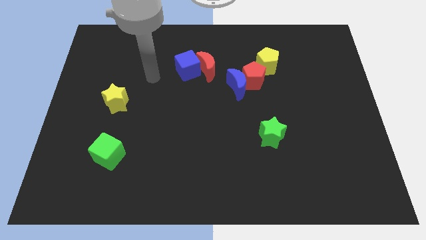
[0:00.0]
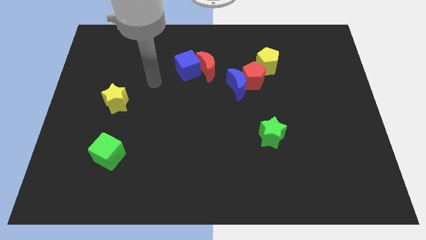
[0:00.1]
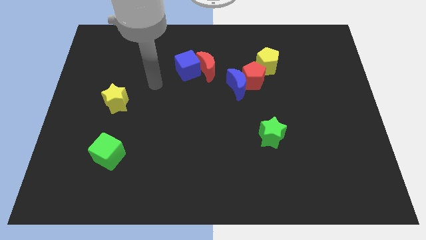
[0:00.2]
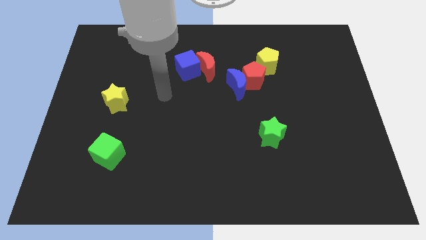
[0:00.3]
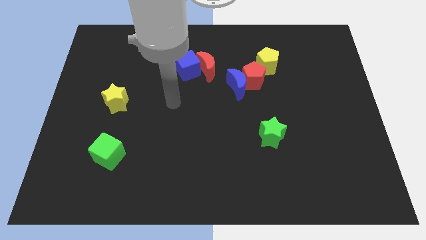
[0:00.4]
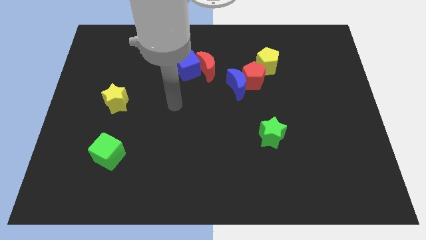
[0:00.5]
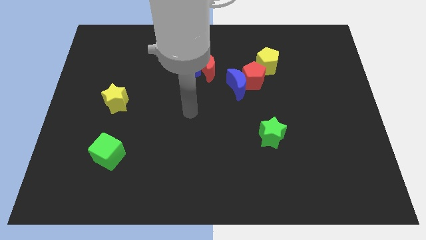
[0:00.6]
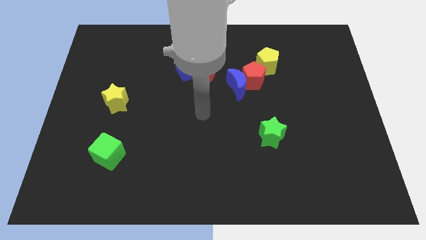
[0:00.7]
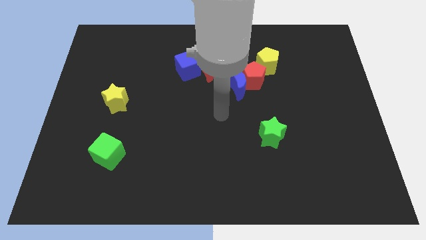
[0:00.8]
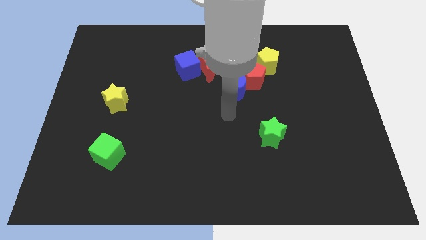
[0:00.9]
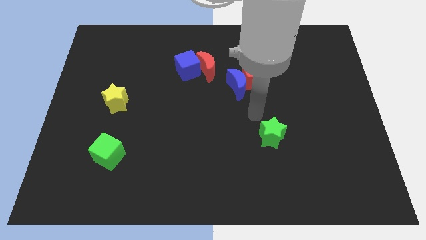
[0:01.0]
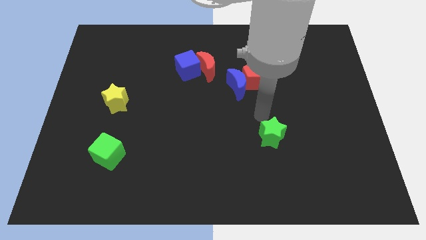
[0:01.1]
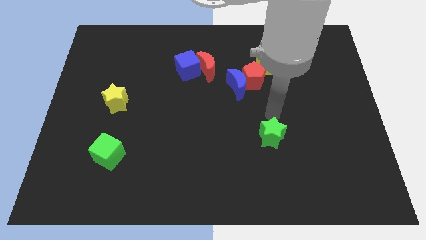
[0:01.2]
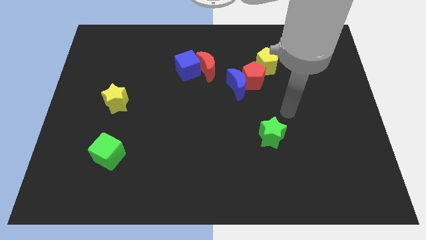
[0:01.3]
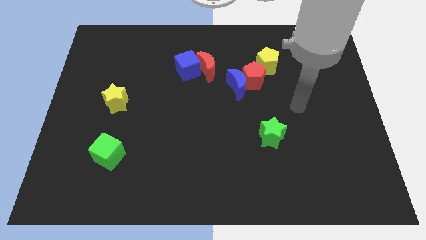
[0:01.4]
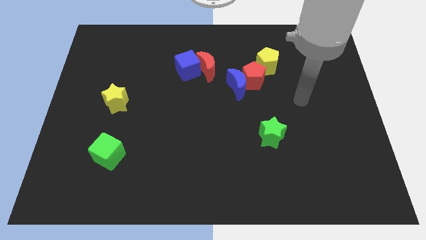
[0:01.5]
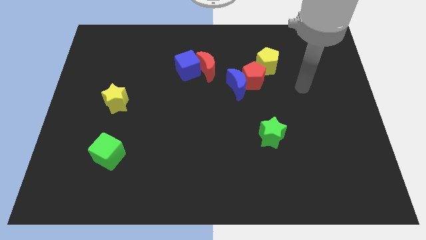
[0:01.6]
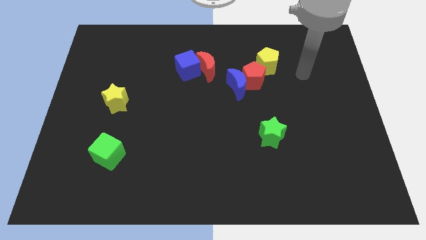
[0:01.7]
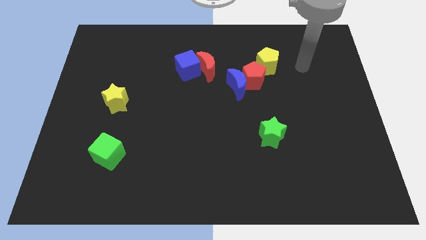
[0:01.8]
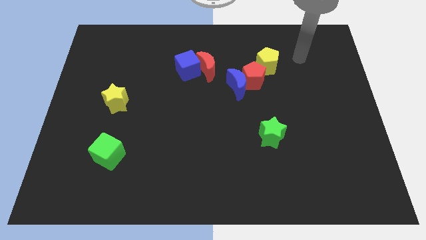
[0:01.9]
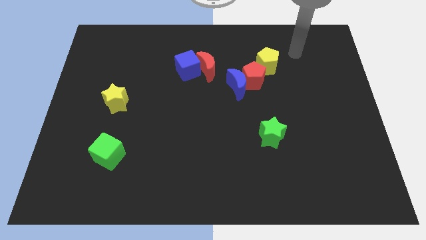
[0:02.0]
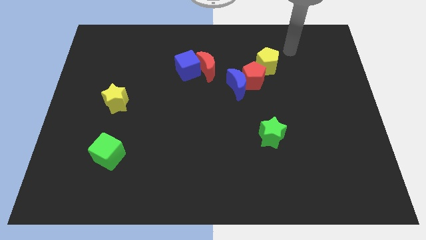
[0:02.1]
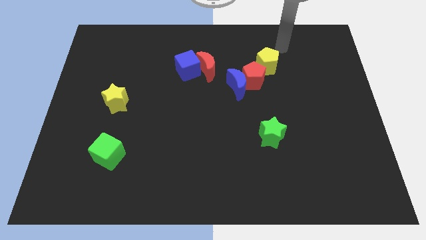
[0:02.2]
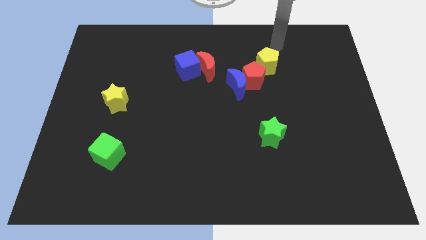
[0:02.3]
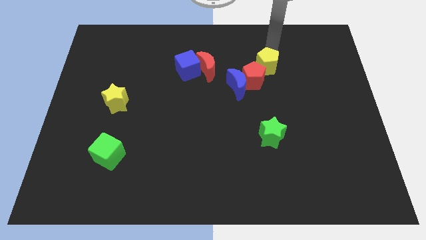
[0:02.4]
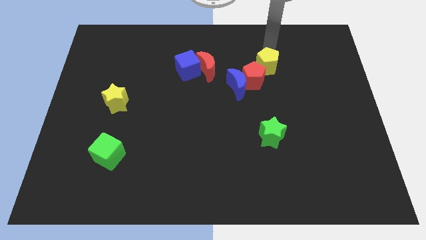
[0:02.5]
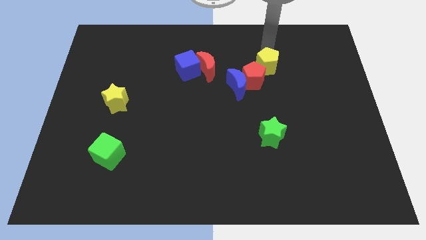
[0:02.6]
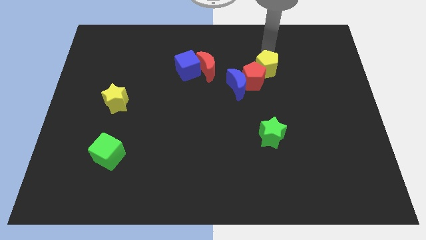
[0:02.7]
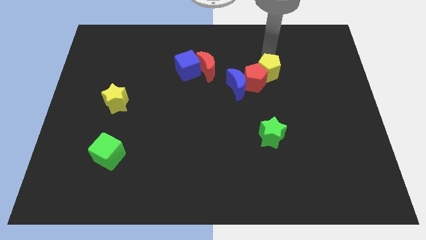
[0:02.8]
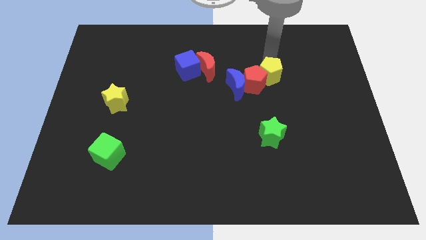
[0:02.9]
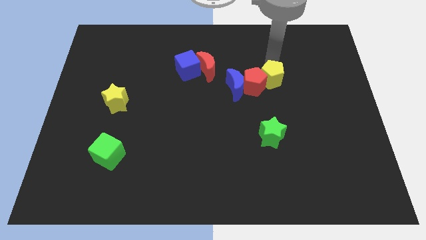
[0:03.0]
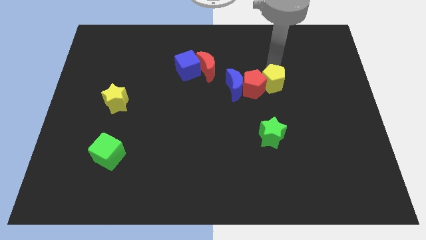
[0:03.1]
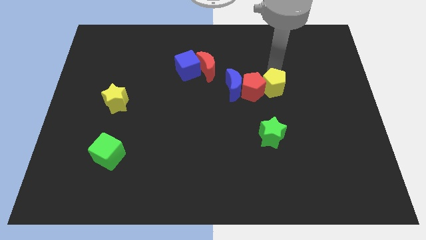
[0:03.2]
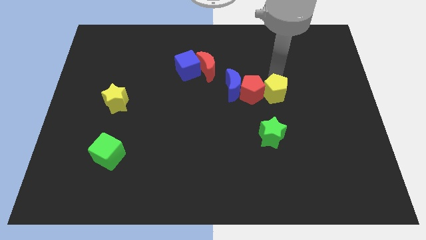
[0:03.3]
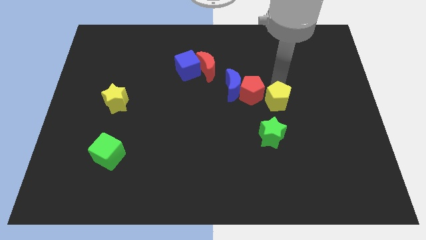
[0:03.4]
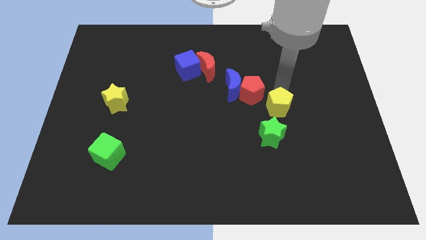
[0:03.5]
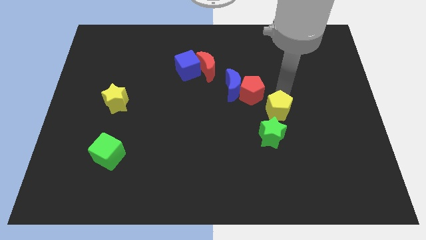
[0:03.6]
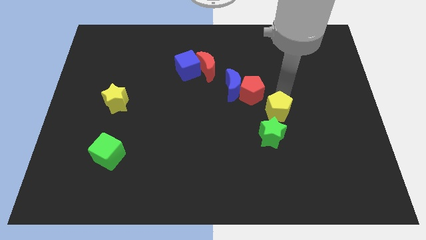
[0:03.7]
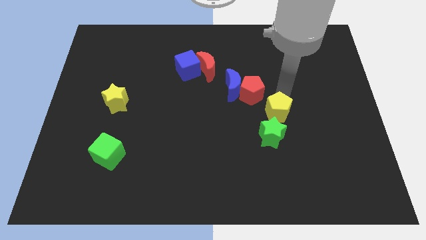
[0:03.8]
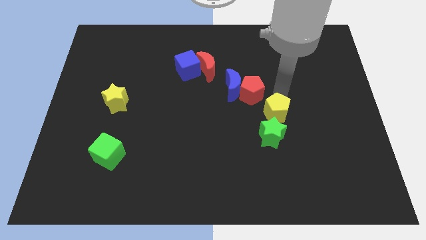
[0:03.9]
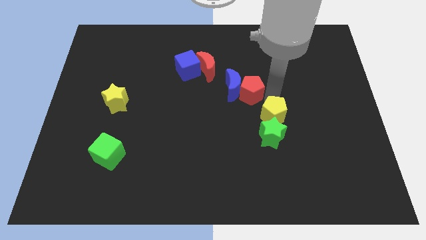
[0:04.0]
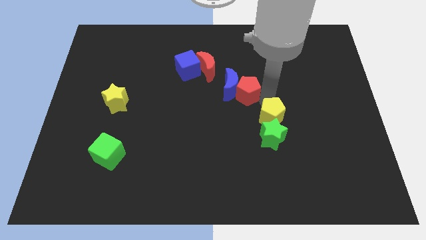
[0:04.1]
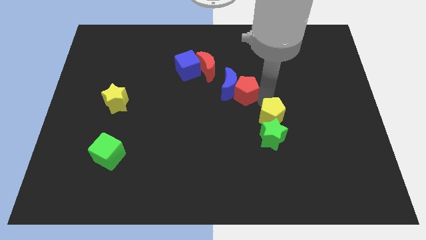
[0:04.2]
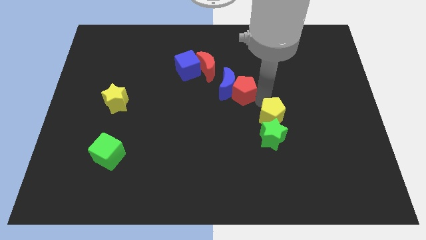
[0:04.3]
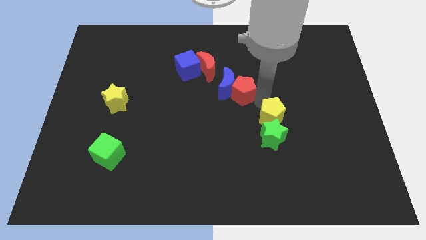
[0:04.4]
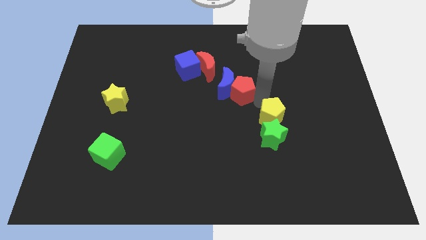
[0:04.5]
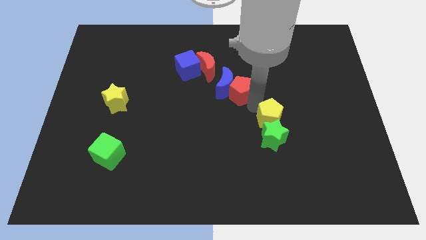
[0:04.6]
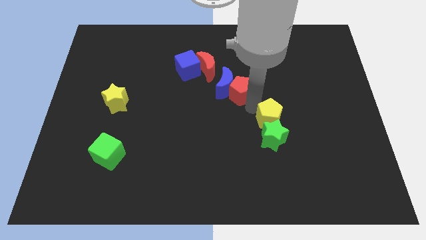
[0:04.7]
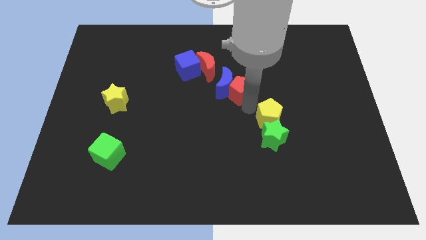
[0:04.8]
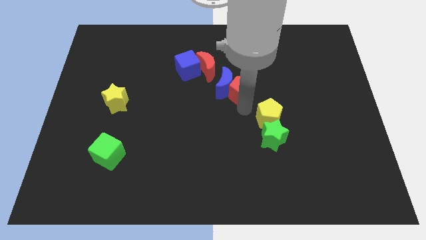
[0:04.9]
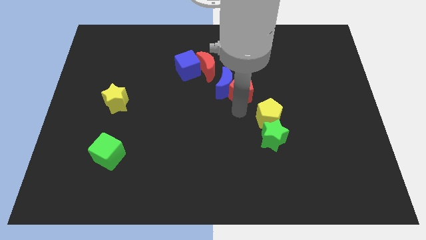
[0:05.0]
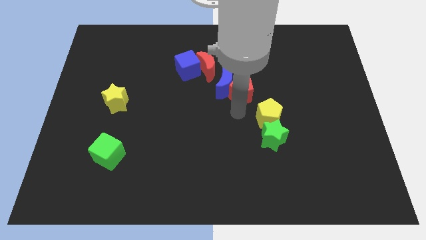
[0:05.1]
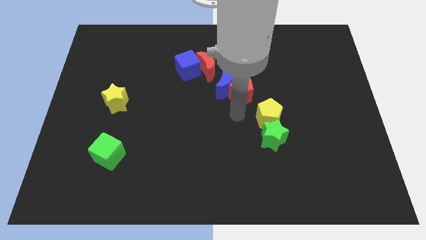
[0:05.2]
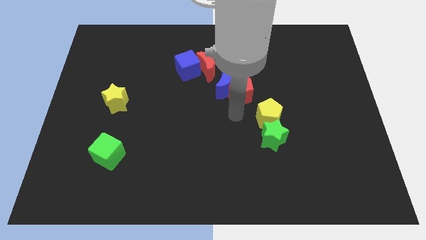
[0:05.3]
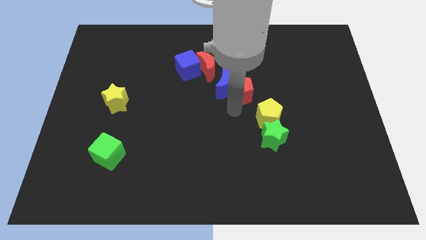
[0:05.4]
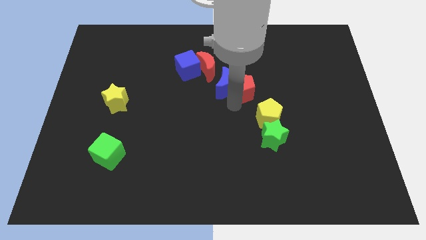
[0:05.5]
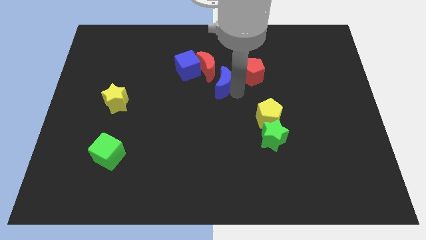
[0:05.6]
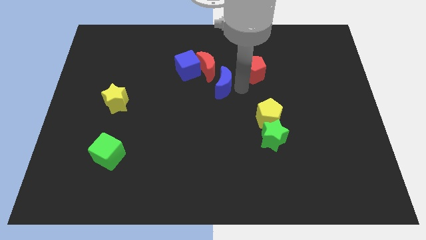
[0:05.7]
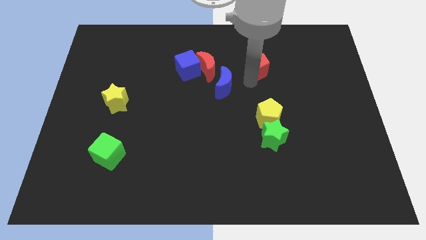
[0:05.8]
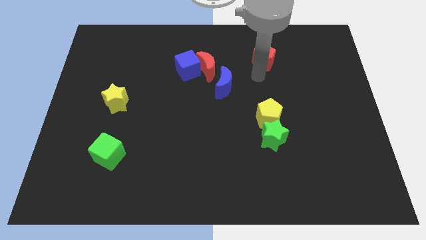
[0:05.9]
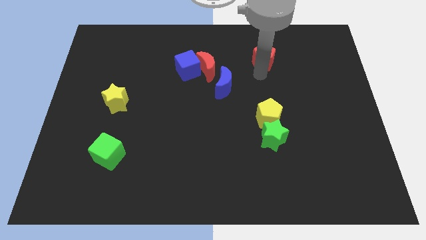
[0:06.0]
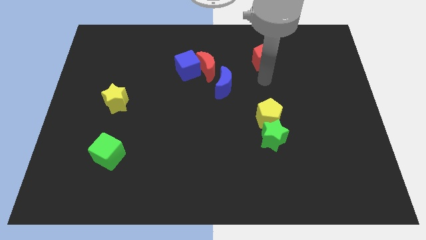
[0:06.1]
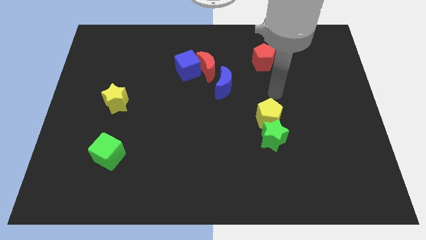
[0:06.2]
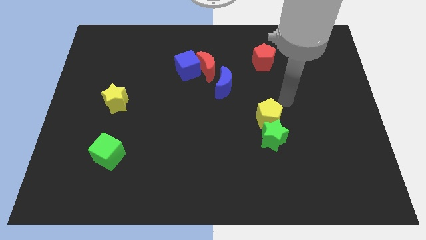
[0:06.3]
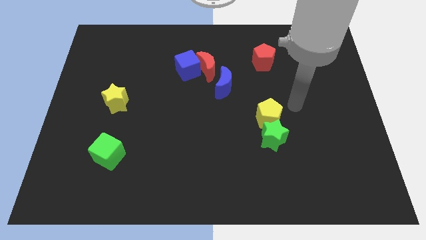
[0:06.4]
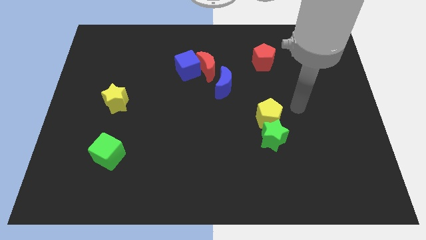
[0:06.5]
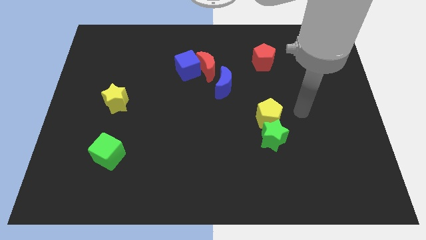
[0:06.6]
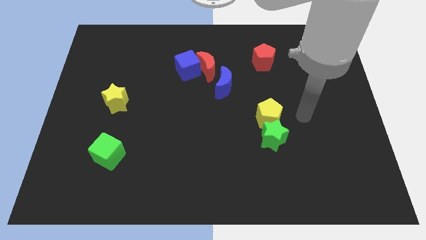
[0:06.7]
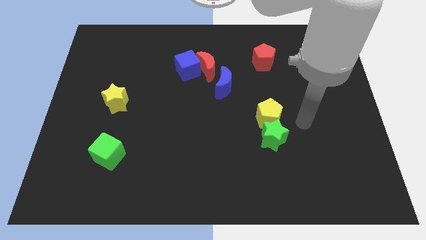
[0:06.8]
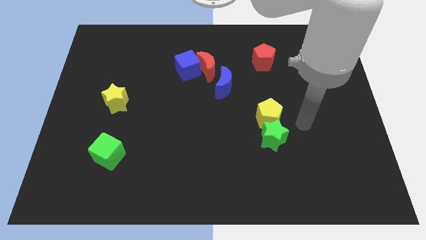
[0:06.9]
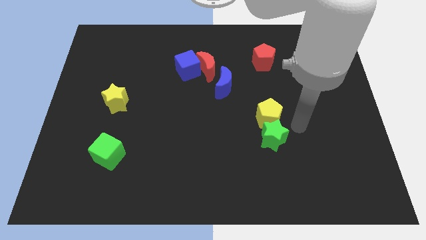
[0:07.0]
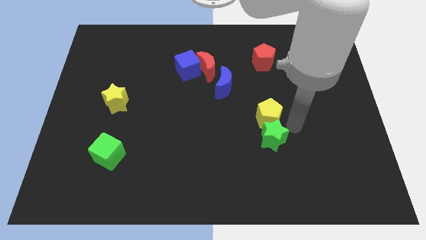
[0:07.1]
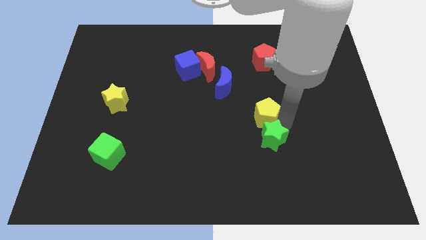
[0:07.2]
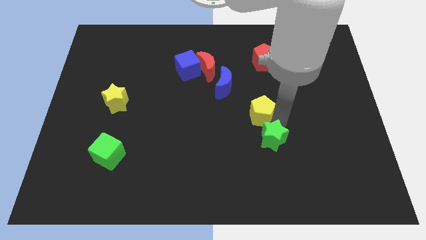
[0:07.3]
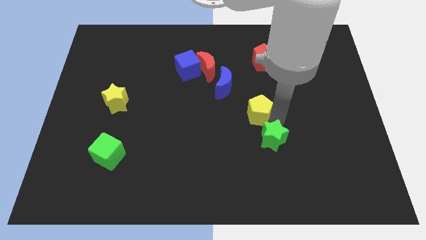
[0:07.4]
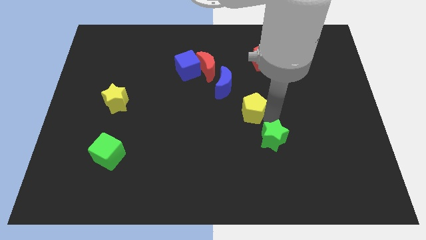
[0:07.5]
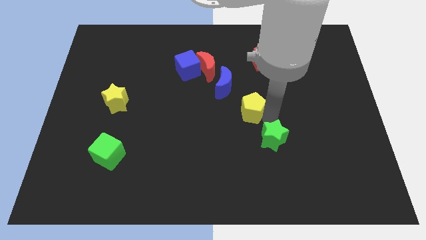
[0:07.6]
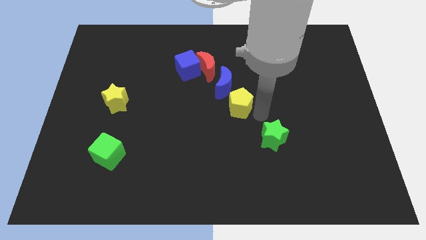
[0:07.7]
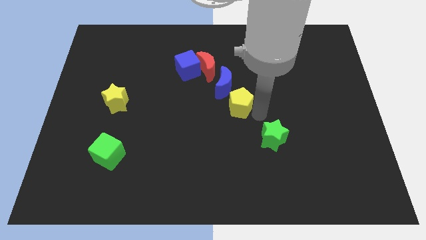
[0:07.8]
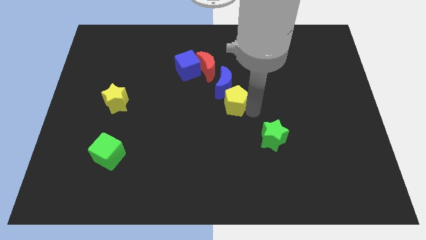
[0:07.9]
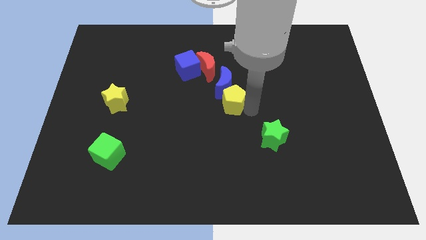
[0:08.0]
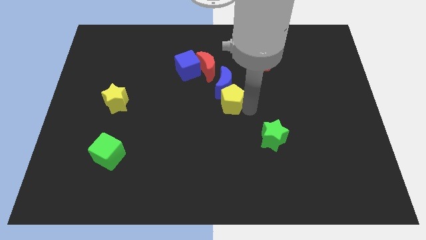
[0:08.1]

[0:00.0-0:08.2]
move the yellow pentagon next to the blue moon

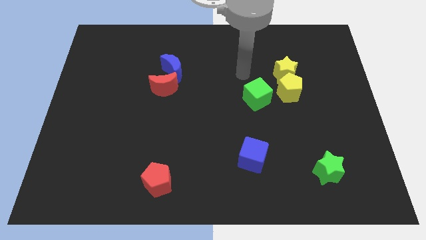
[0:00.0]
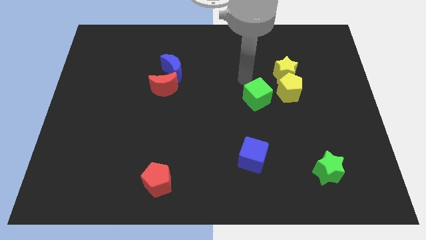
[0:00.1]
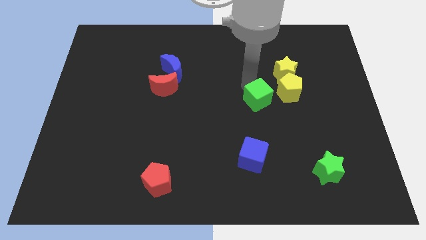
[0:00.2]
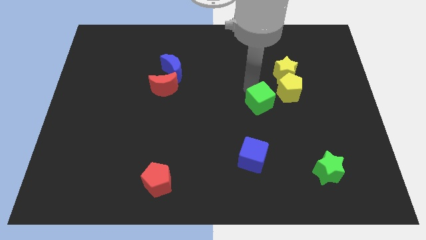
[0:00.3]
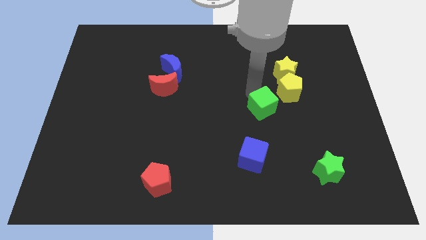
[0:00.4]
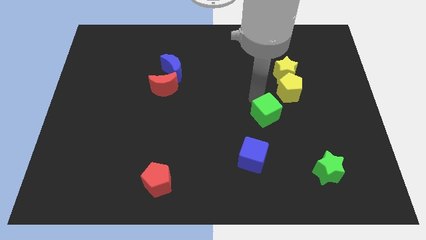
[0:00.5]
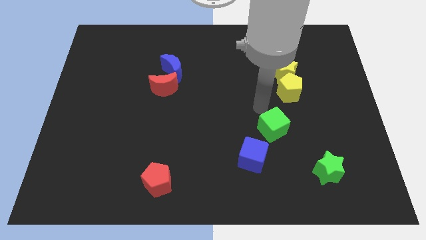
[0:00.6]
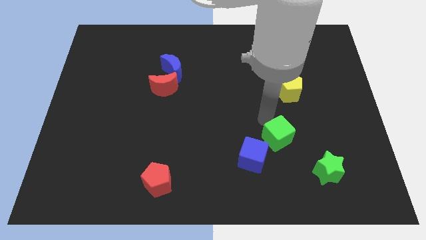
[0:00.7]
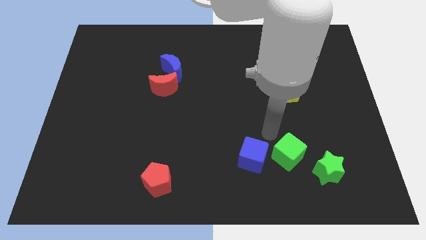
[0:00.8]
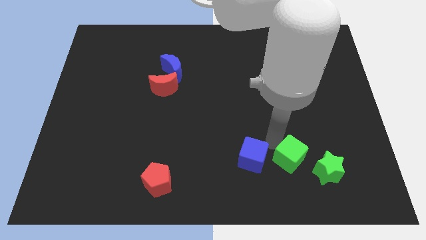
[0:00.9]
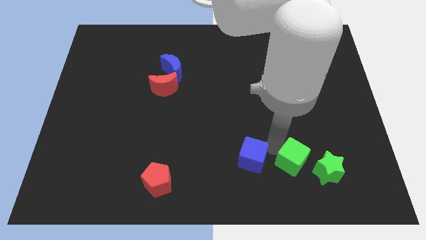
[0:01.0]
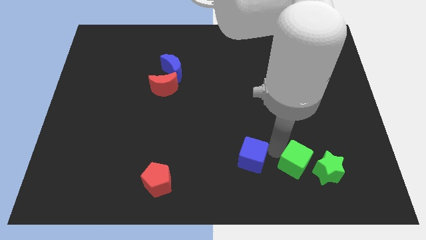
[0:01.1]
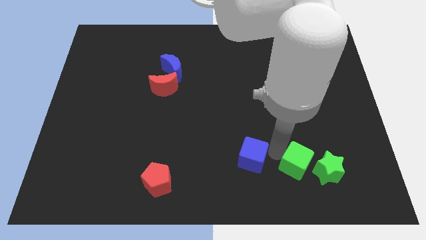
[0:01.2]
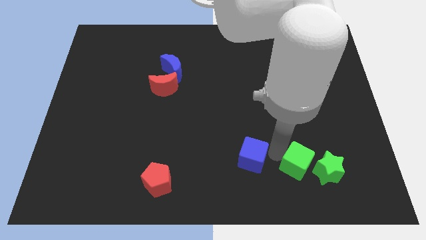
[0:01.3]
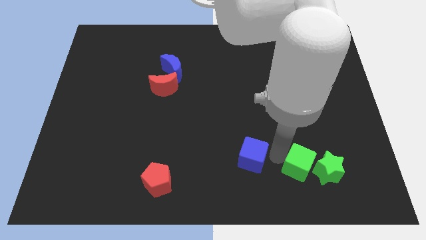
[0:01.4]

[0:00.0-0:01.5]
push the green cube next to the green star
